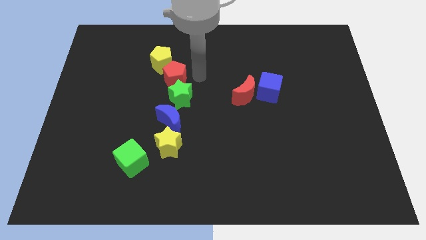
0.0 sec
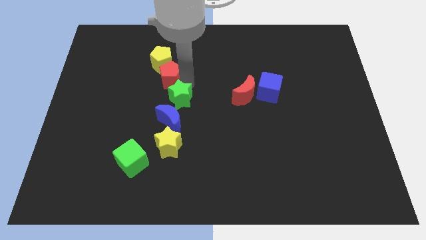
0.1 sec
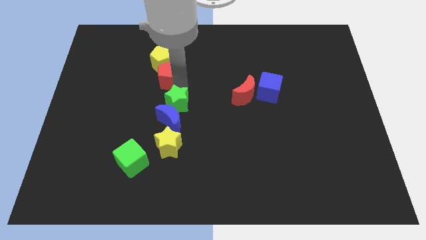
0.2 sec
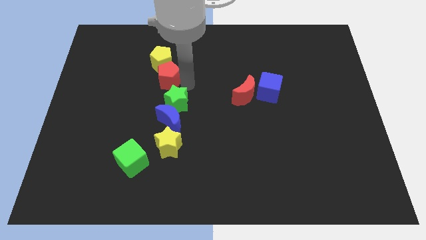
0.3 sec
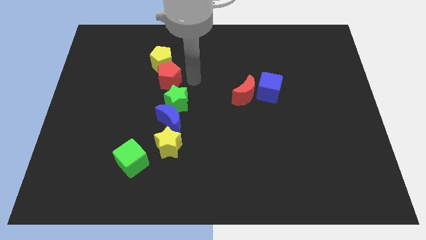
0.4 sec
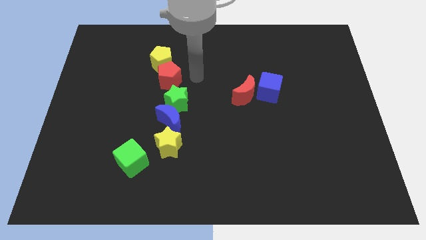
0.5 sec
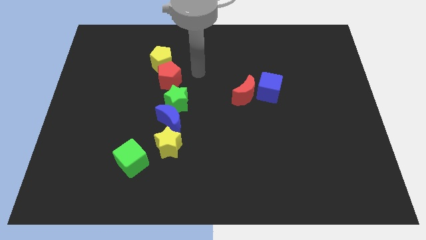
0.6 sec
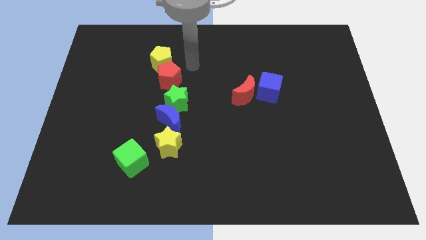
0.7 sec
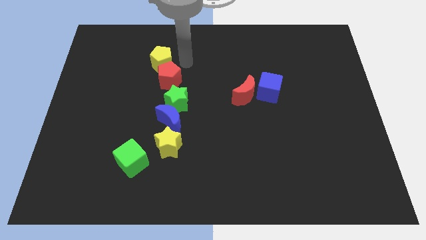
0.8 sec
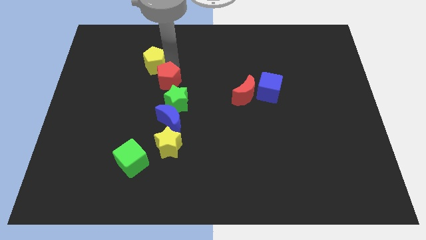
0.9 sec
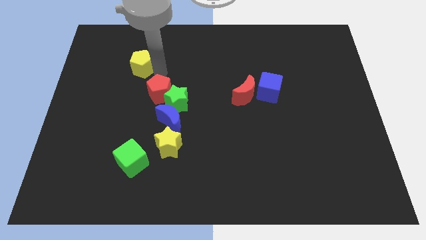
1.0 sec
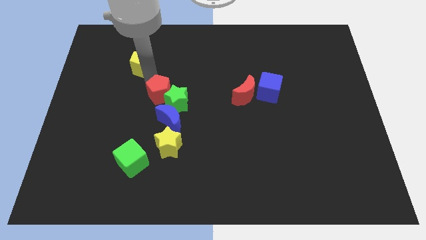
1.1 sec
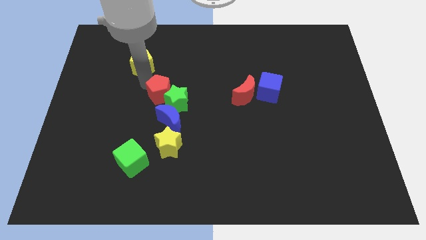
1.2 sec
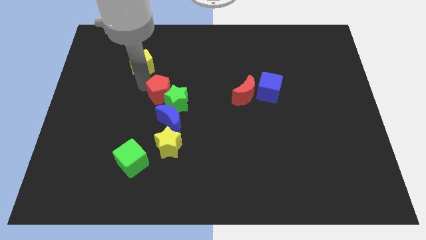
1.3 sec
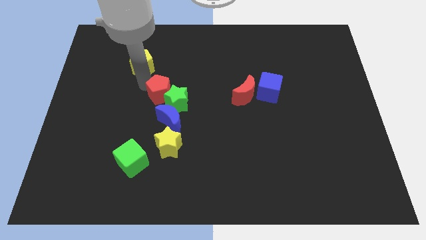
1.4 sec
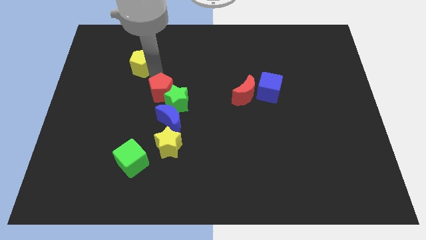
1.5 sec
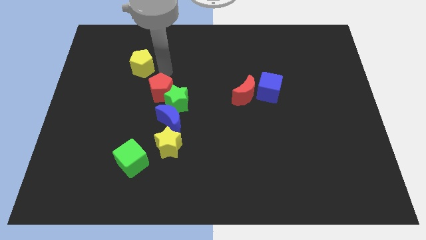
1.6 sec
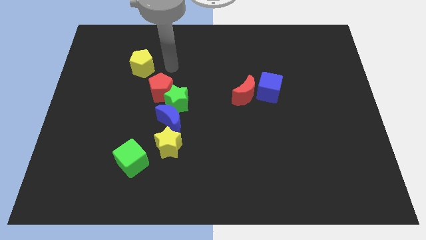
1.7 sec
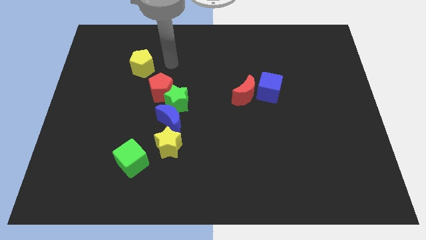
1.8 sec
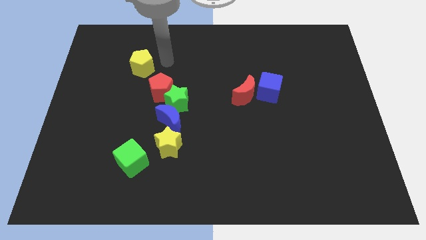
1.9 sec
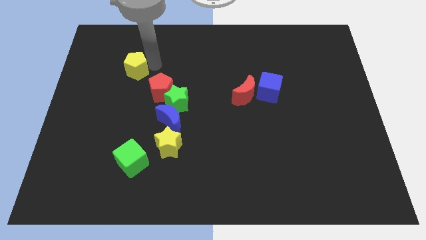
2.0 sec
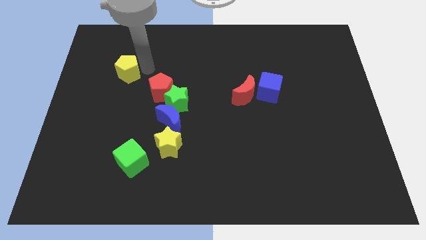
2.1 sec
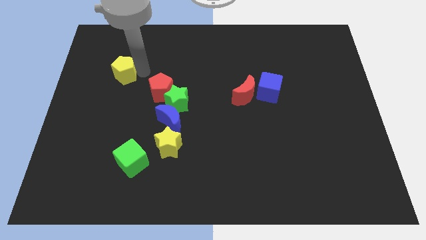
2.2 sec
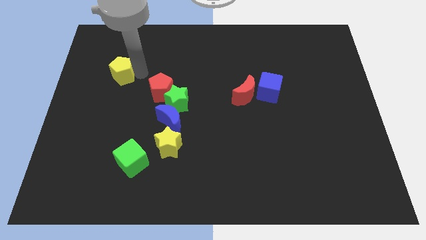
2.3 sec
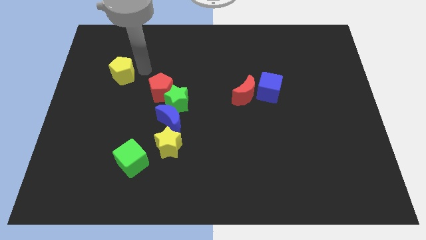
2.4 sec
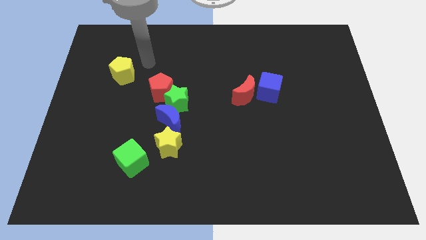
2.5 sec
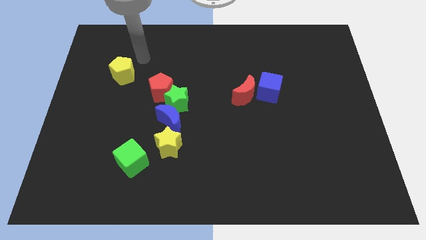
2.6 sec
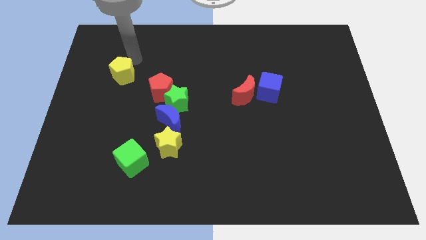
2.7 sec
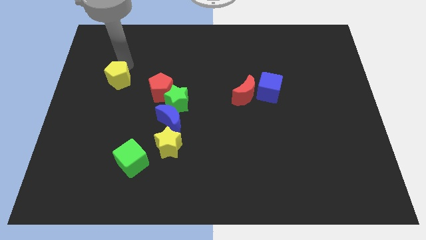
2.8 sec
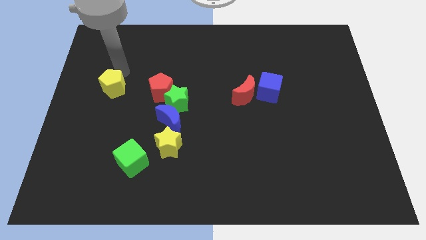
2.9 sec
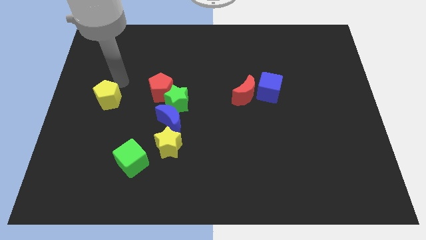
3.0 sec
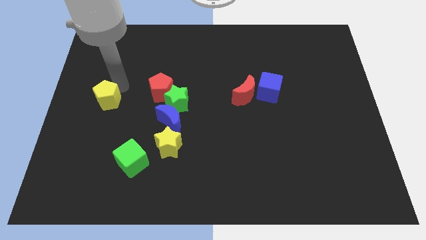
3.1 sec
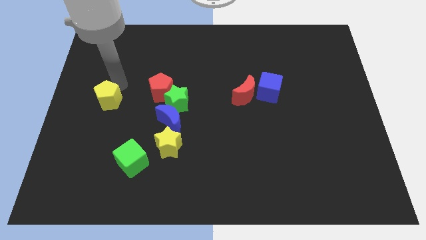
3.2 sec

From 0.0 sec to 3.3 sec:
move the yellow pentagon away from the red pentagon

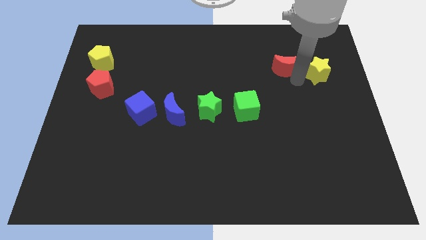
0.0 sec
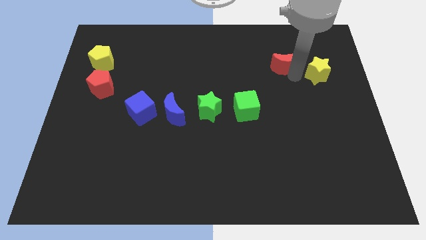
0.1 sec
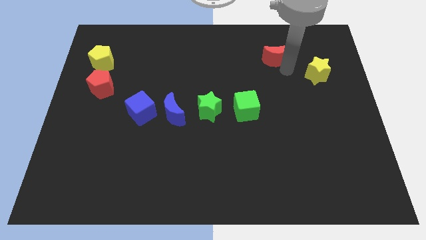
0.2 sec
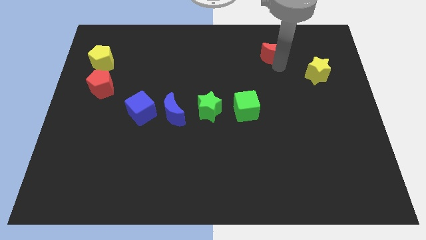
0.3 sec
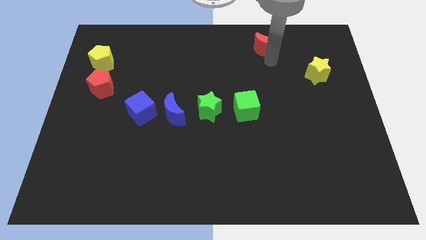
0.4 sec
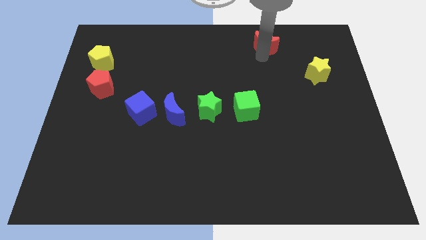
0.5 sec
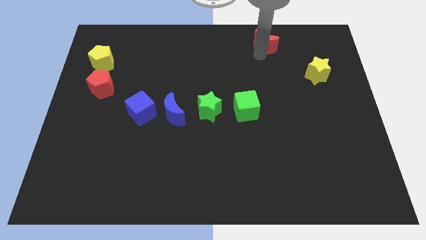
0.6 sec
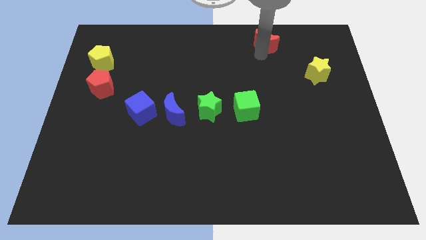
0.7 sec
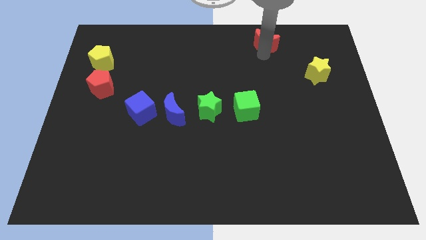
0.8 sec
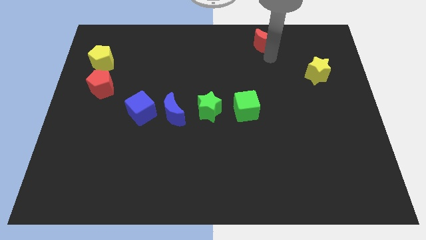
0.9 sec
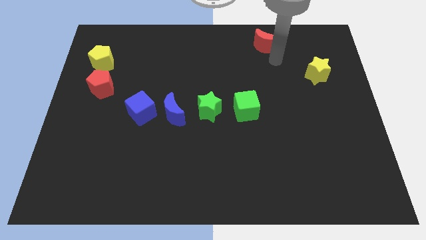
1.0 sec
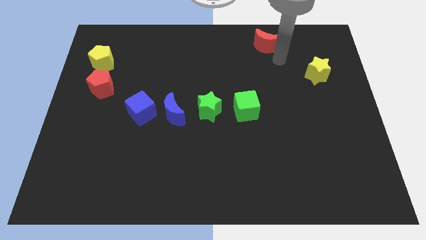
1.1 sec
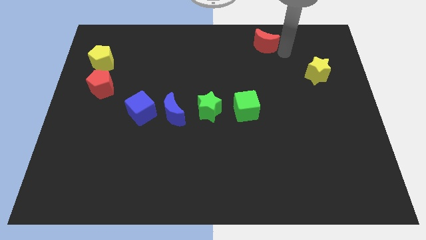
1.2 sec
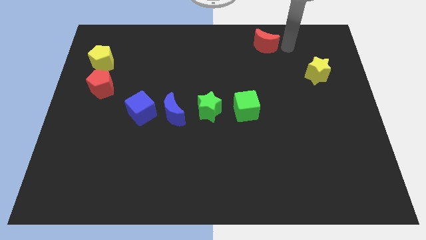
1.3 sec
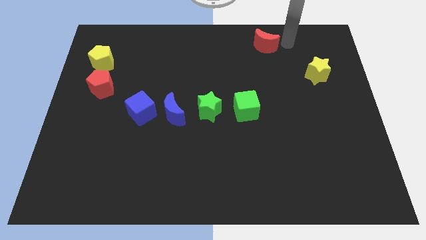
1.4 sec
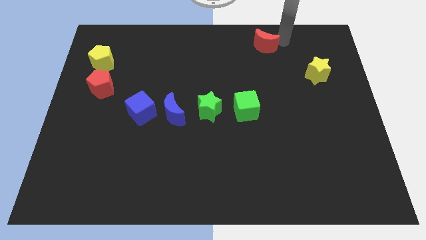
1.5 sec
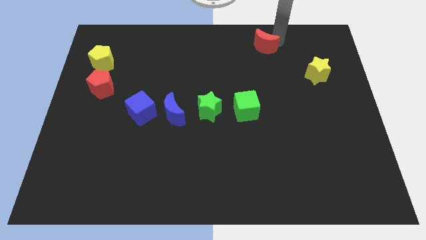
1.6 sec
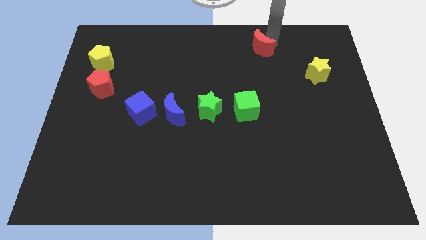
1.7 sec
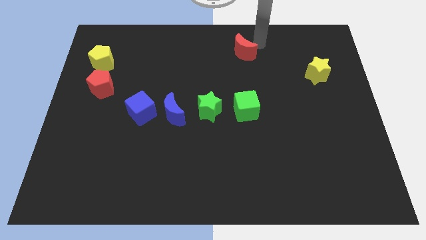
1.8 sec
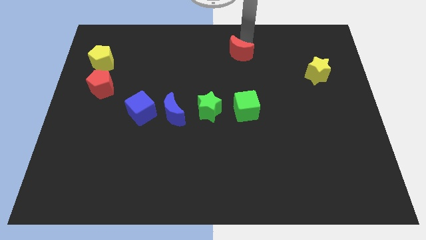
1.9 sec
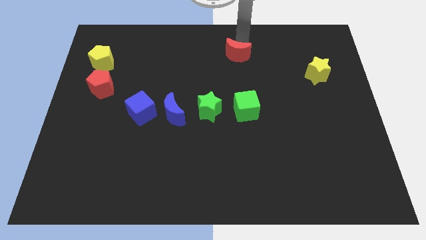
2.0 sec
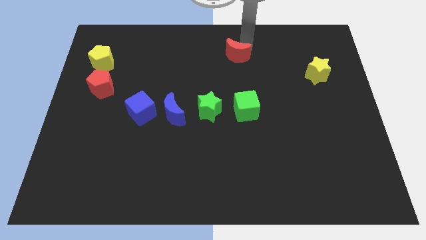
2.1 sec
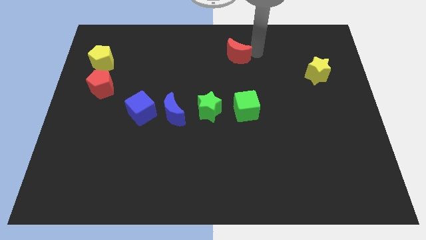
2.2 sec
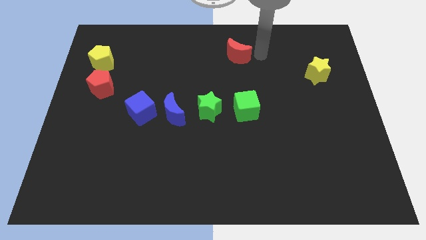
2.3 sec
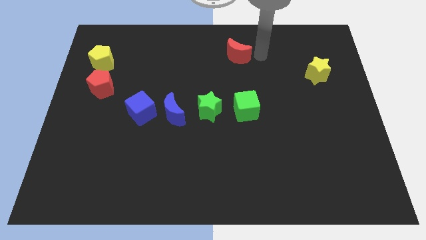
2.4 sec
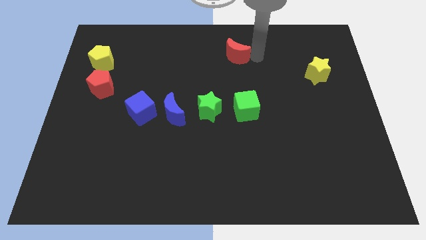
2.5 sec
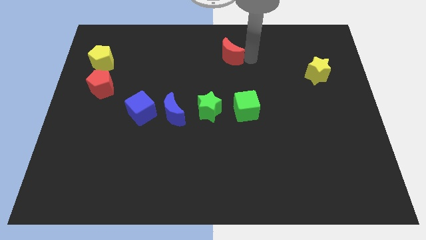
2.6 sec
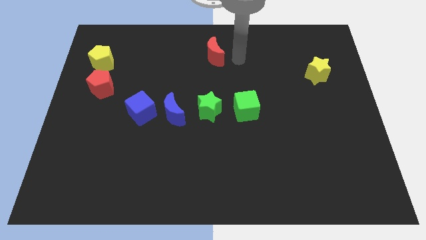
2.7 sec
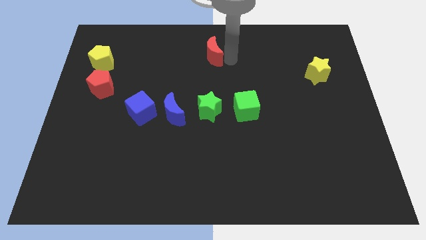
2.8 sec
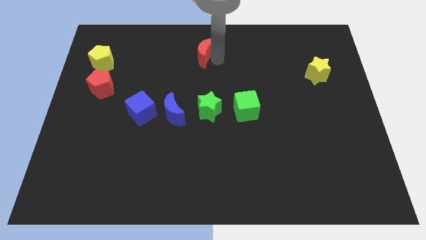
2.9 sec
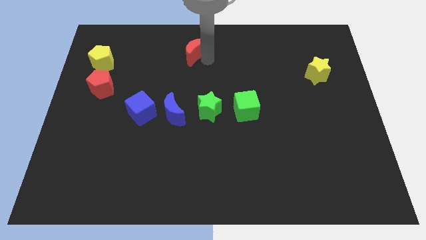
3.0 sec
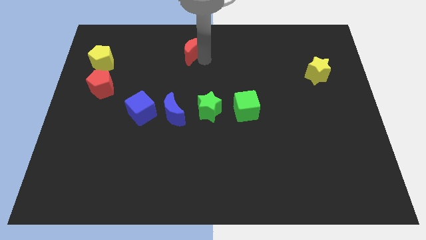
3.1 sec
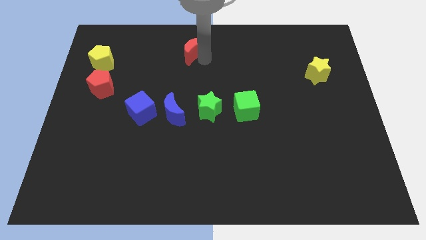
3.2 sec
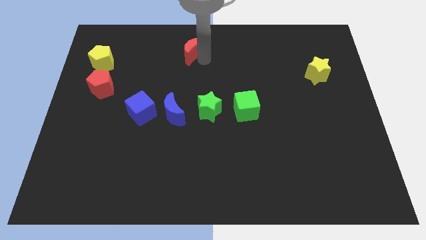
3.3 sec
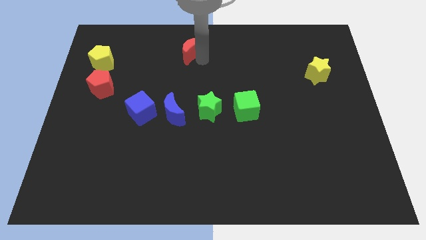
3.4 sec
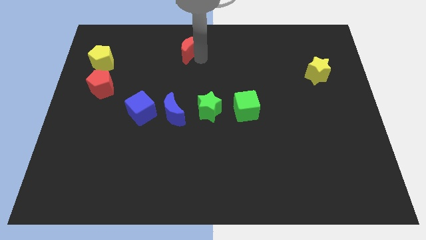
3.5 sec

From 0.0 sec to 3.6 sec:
move the red moon slightly left

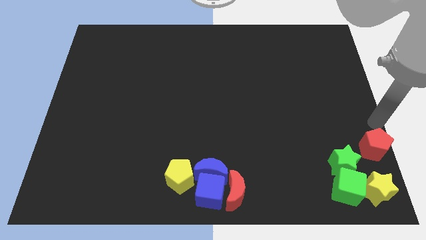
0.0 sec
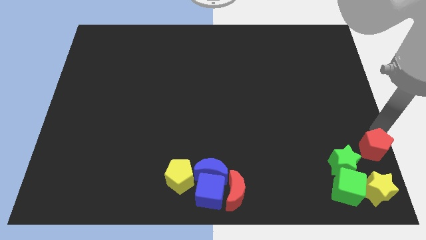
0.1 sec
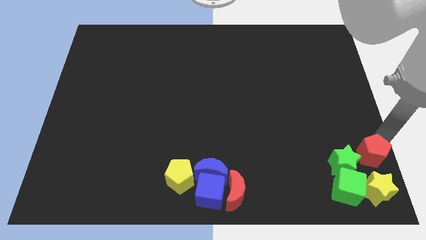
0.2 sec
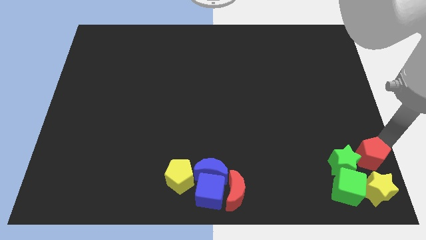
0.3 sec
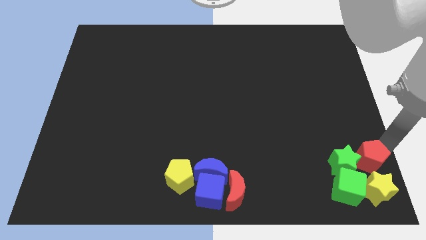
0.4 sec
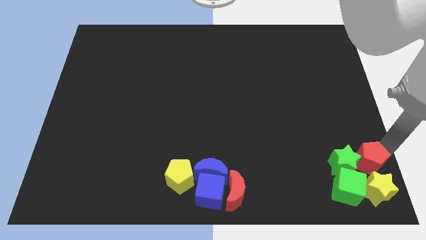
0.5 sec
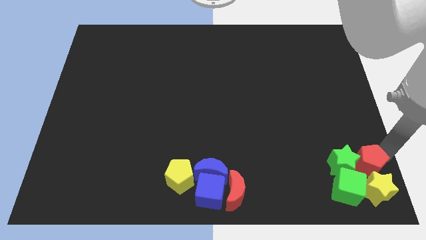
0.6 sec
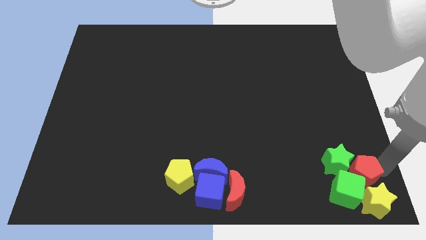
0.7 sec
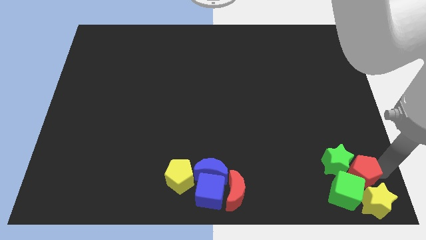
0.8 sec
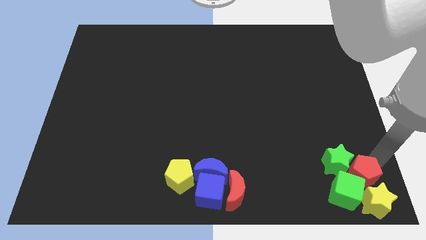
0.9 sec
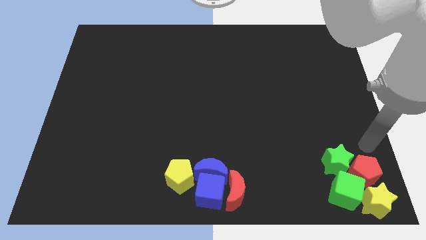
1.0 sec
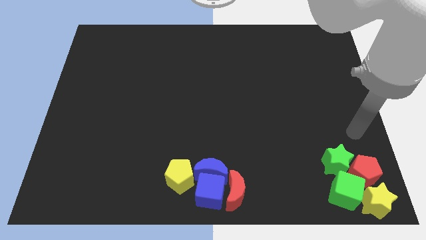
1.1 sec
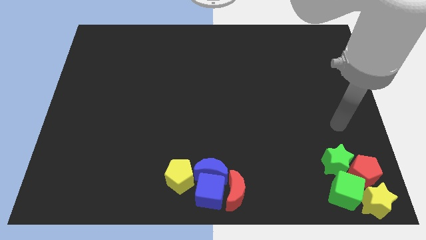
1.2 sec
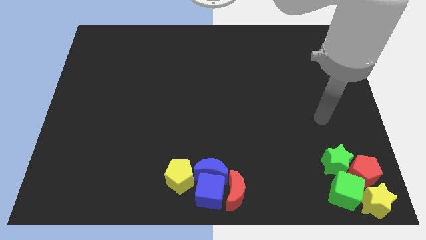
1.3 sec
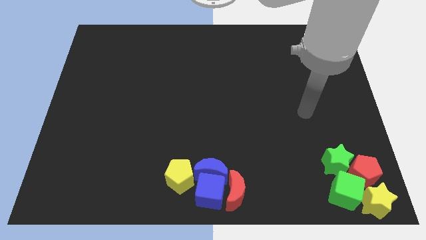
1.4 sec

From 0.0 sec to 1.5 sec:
move red pentagon in between green and yellow star

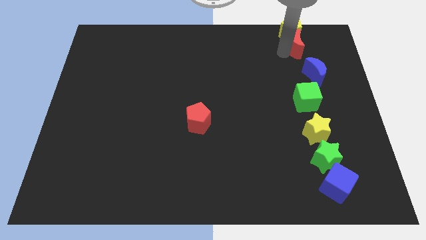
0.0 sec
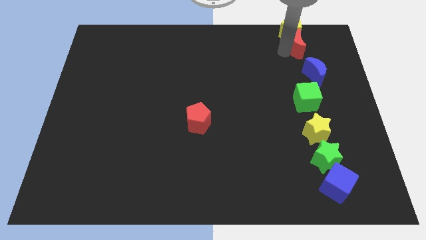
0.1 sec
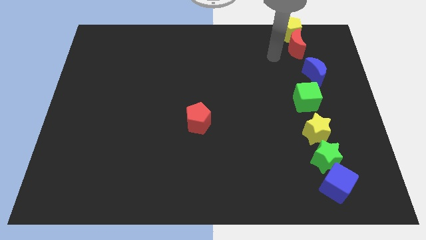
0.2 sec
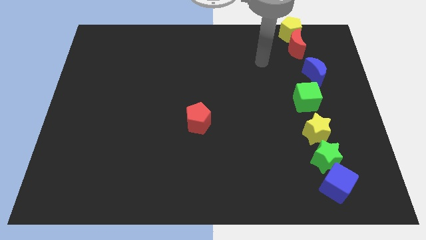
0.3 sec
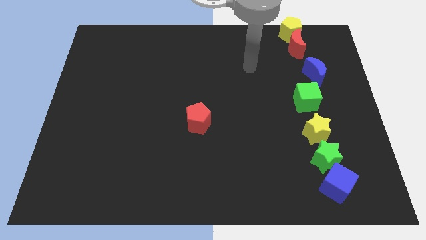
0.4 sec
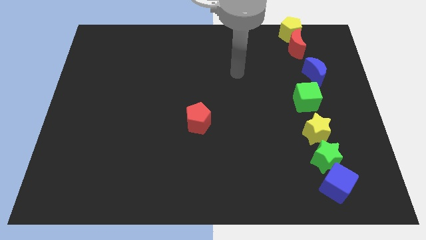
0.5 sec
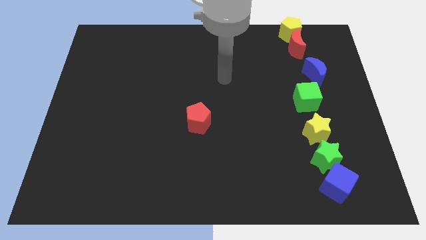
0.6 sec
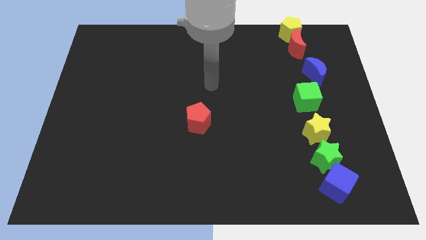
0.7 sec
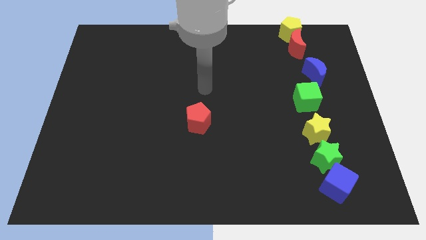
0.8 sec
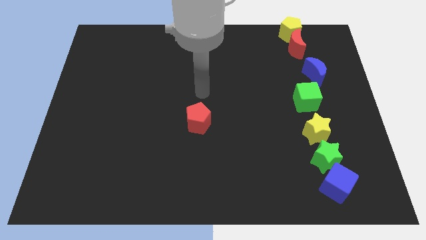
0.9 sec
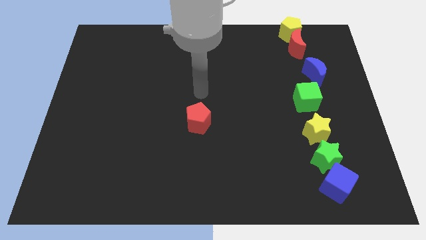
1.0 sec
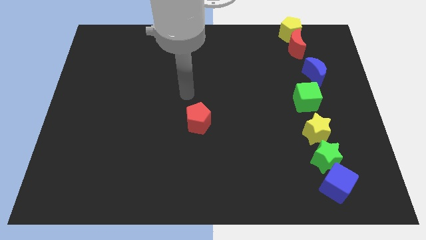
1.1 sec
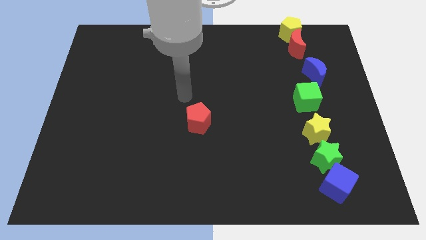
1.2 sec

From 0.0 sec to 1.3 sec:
move your arm to the top left side of the red pentagon
